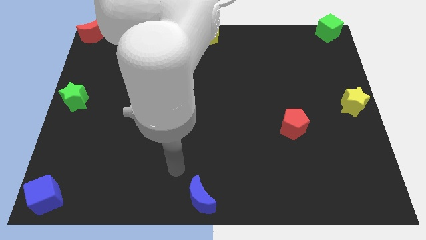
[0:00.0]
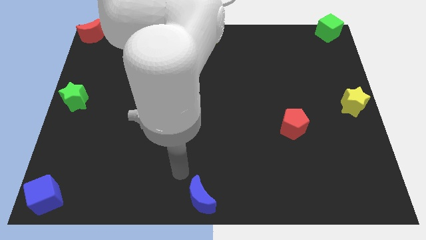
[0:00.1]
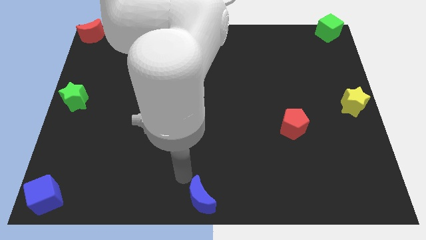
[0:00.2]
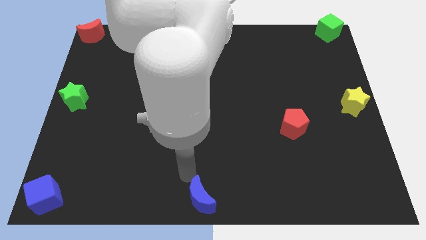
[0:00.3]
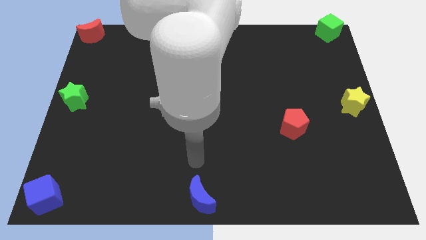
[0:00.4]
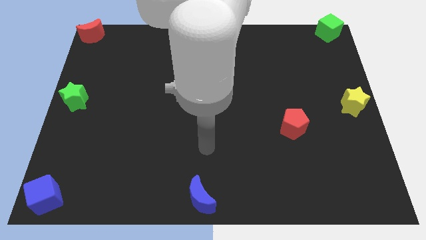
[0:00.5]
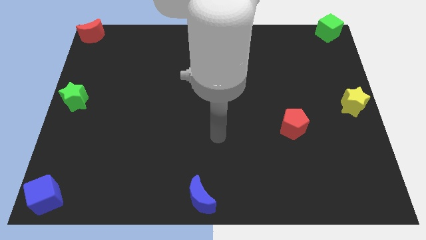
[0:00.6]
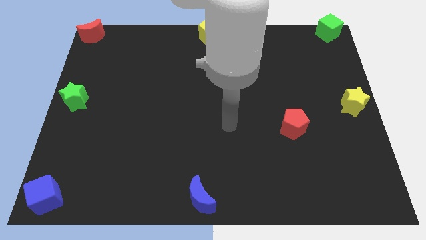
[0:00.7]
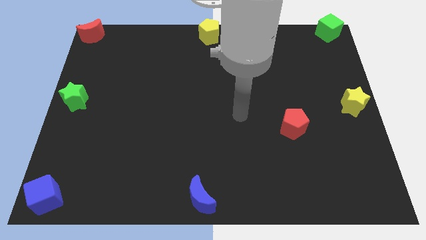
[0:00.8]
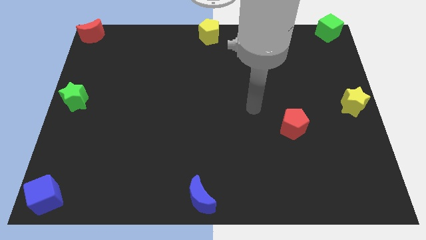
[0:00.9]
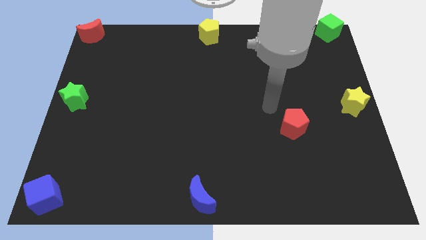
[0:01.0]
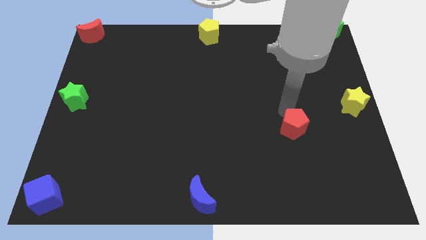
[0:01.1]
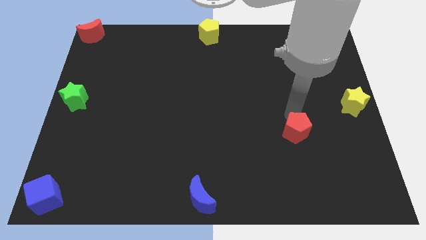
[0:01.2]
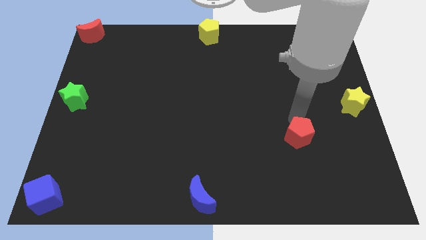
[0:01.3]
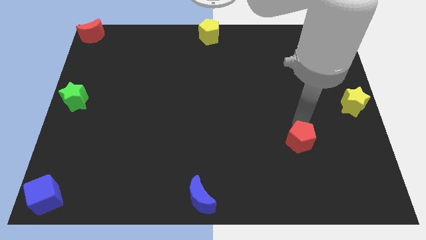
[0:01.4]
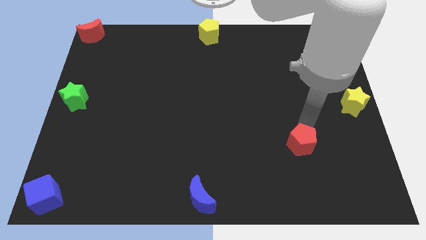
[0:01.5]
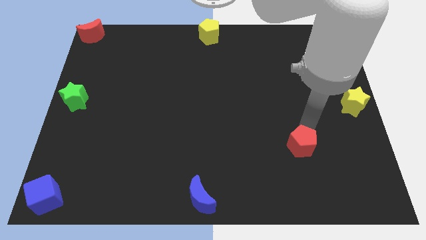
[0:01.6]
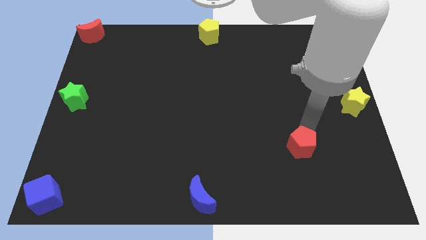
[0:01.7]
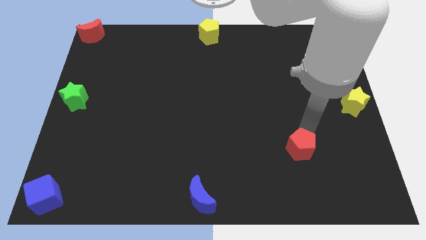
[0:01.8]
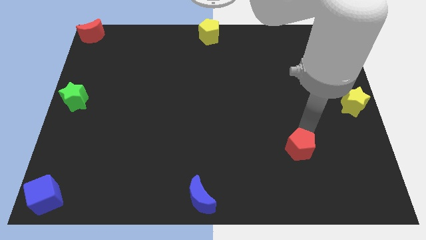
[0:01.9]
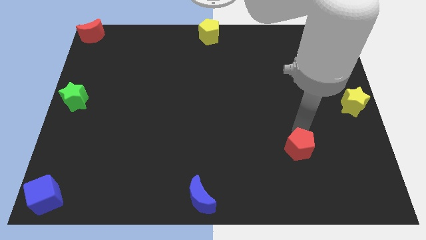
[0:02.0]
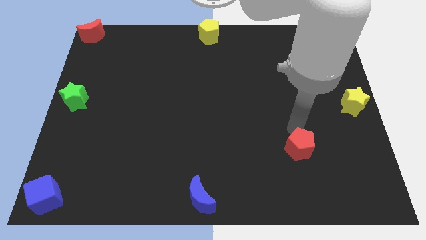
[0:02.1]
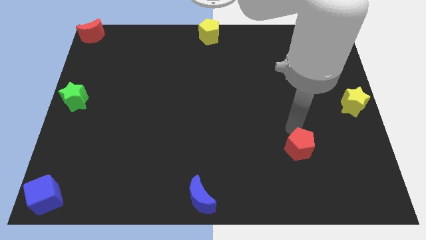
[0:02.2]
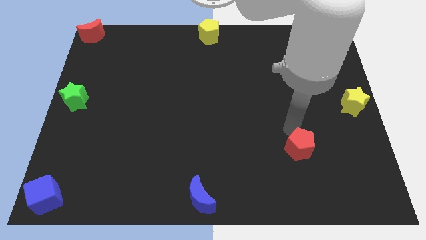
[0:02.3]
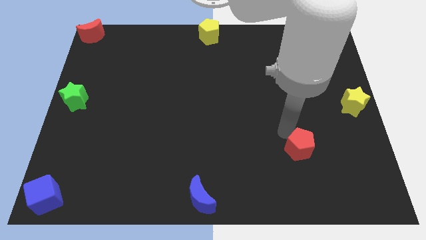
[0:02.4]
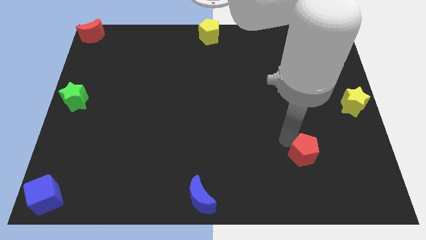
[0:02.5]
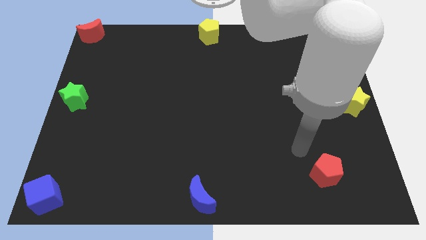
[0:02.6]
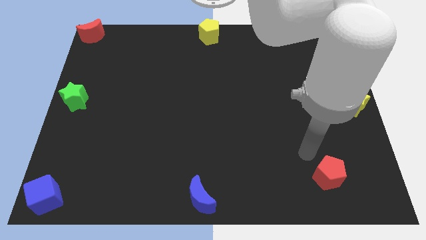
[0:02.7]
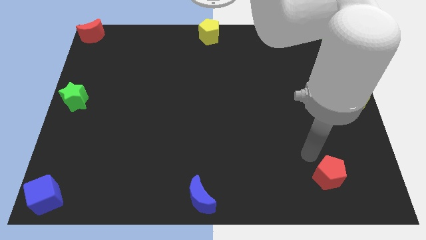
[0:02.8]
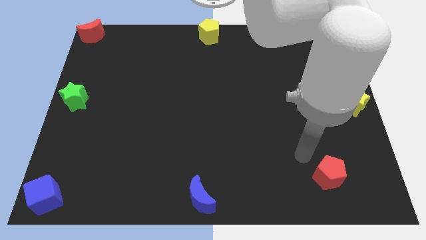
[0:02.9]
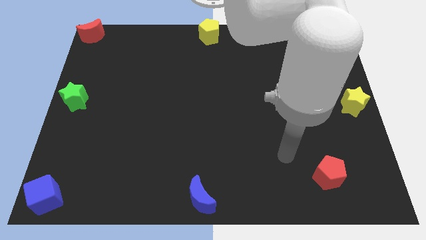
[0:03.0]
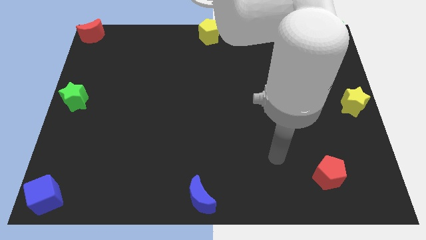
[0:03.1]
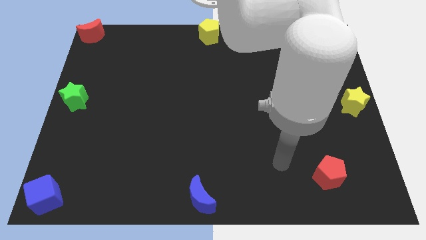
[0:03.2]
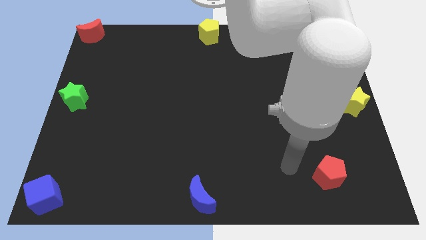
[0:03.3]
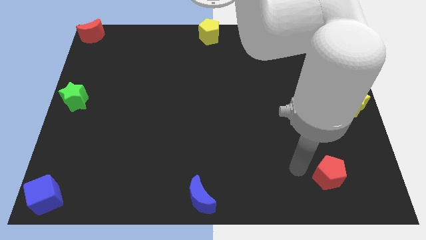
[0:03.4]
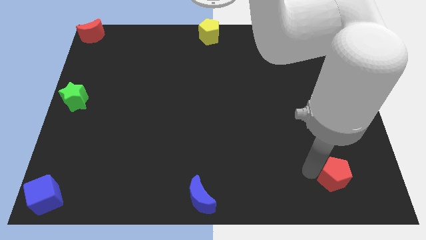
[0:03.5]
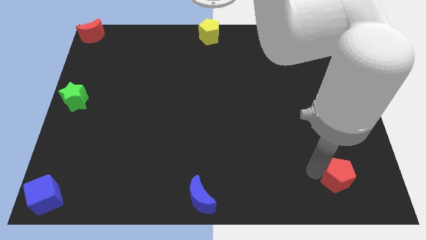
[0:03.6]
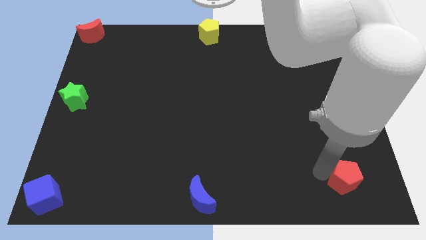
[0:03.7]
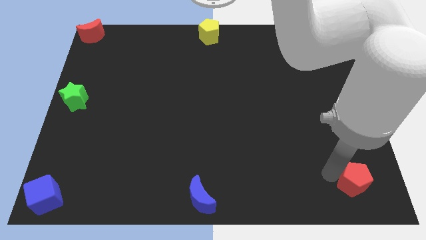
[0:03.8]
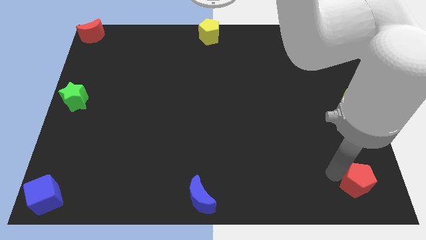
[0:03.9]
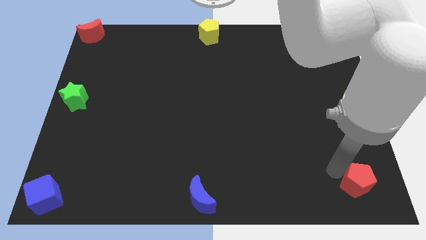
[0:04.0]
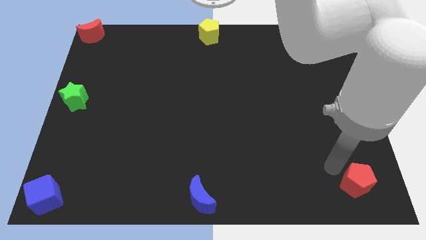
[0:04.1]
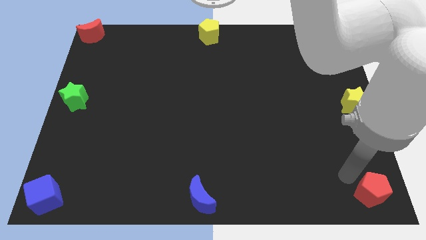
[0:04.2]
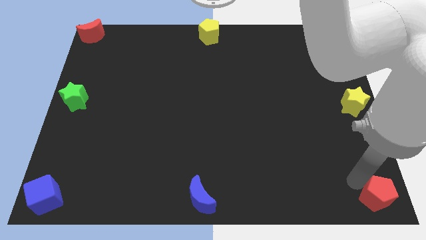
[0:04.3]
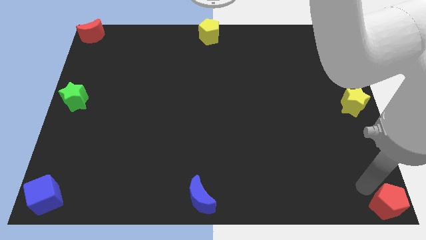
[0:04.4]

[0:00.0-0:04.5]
push the red pentagon to the bottom right corner of the board

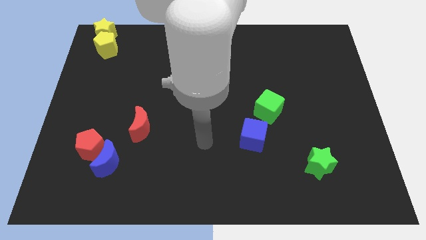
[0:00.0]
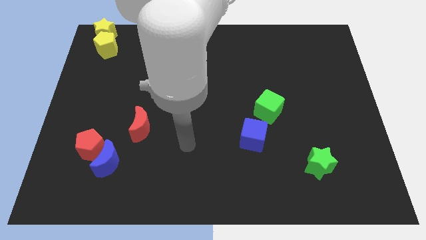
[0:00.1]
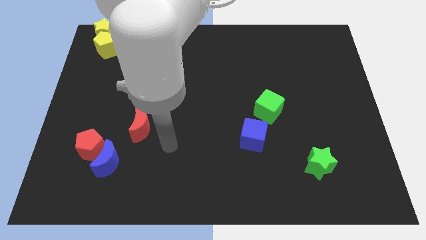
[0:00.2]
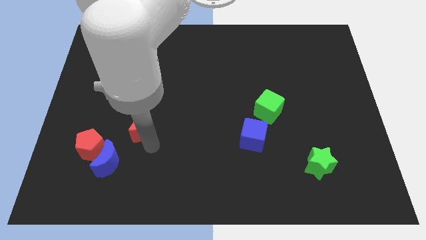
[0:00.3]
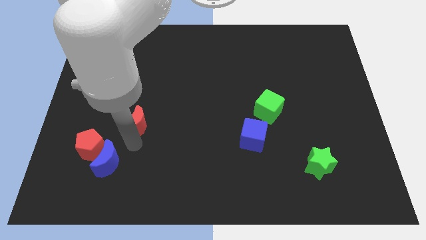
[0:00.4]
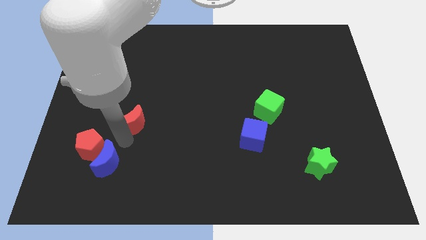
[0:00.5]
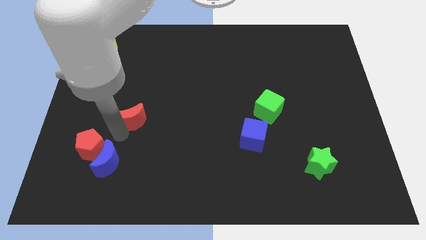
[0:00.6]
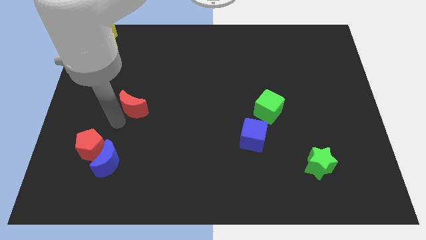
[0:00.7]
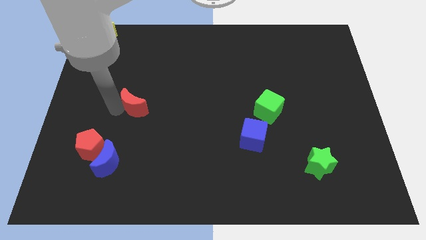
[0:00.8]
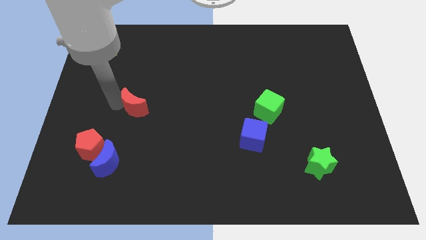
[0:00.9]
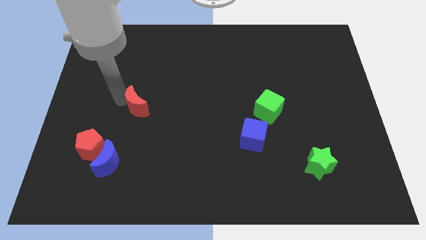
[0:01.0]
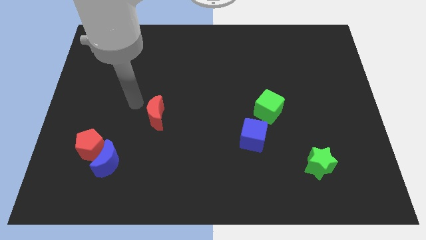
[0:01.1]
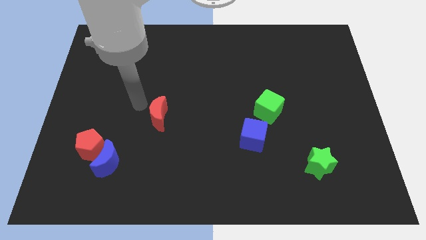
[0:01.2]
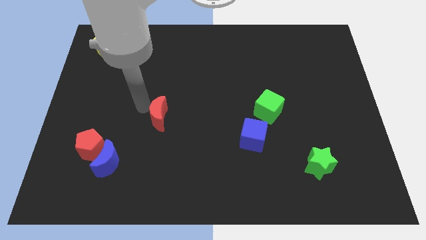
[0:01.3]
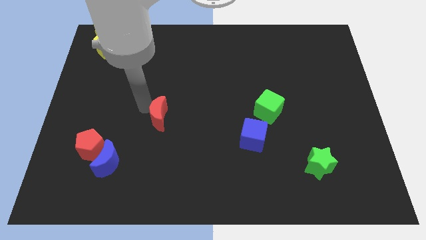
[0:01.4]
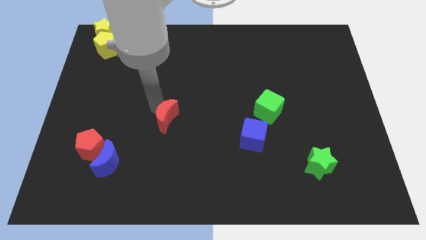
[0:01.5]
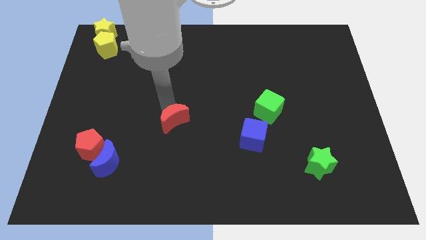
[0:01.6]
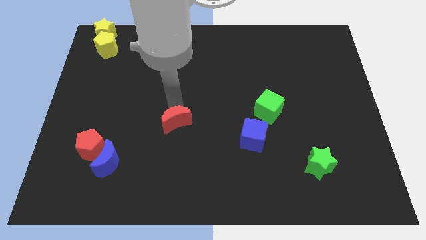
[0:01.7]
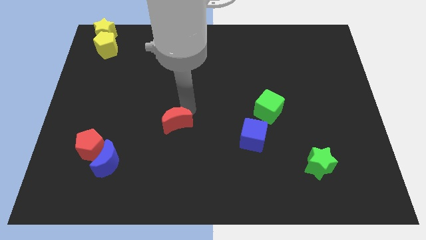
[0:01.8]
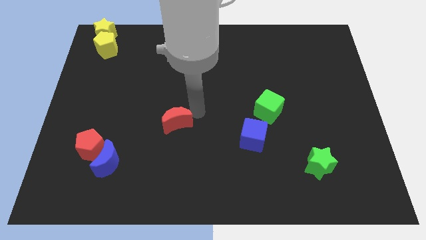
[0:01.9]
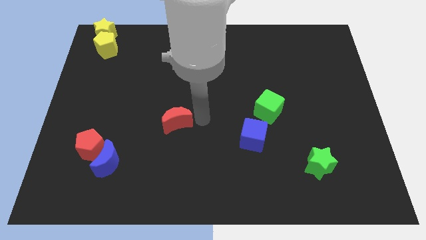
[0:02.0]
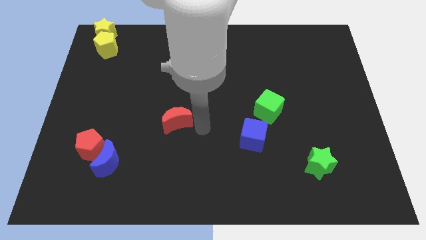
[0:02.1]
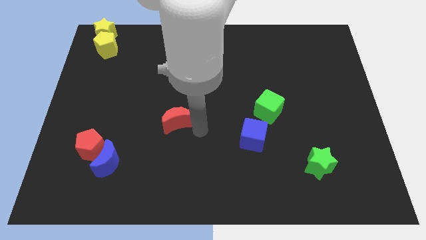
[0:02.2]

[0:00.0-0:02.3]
turn around the red moon

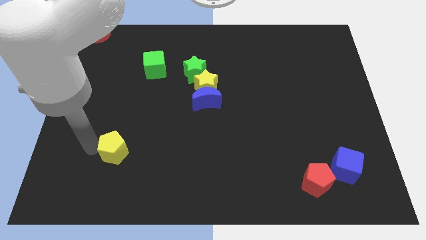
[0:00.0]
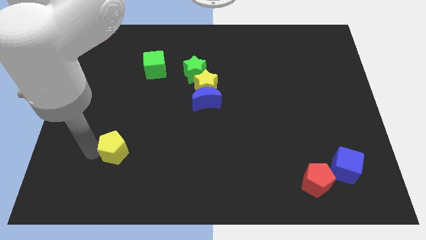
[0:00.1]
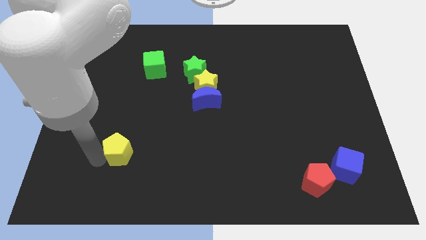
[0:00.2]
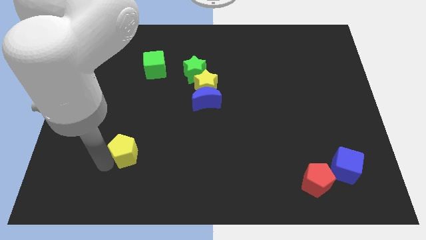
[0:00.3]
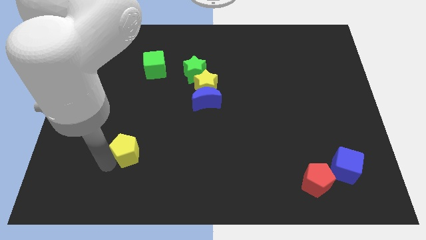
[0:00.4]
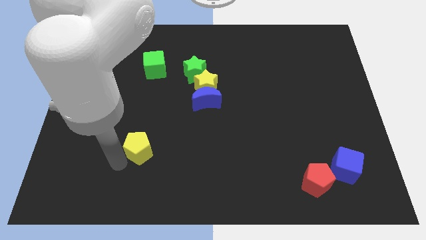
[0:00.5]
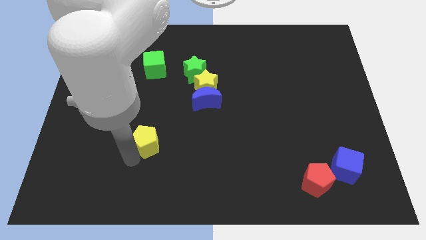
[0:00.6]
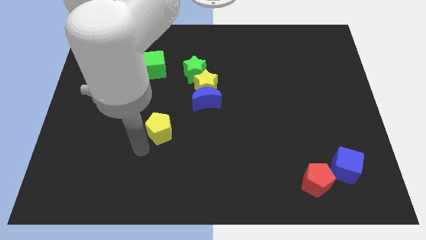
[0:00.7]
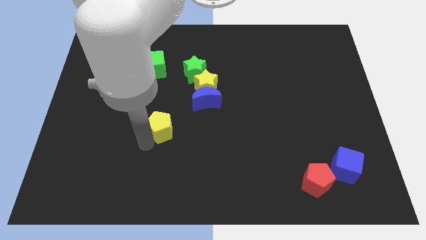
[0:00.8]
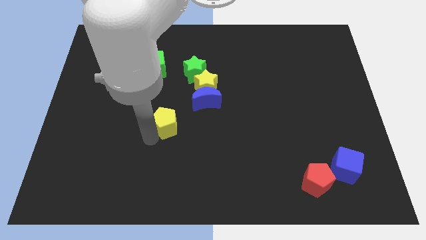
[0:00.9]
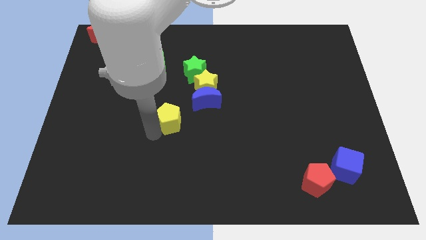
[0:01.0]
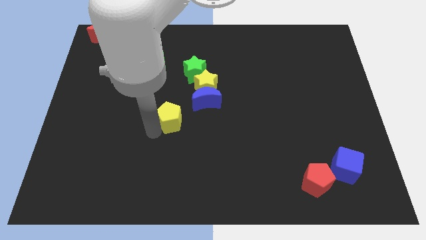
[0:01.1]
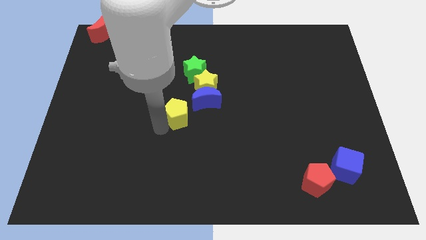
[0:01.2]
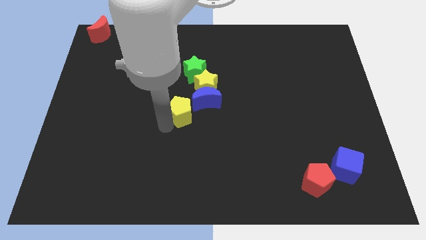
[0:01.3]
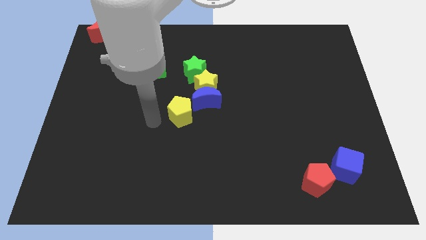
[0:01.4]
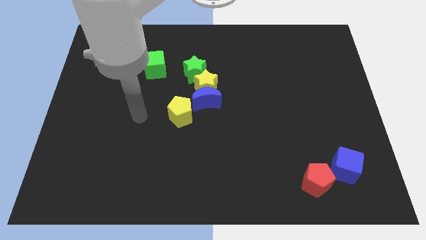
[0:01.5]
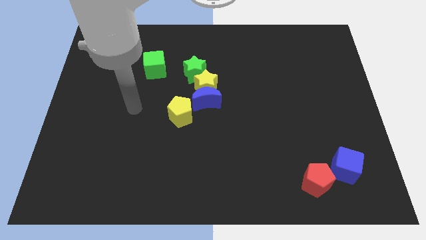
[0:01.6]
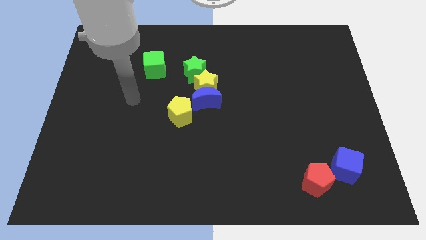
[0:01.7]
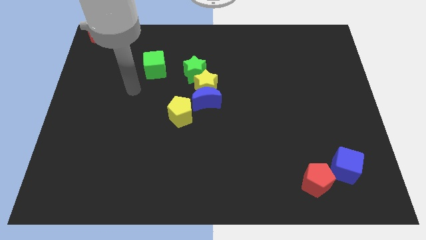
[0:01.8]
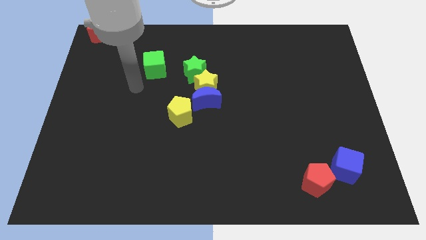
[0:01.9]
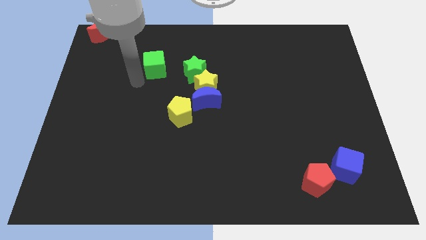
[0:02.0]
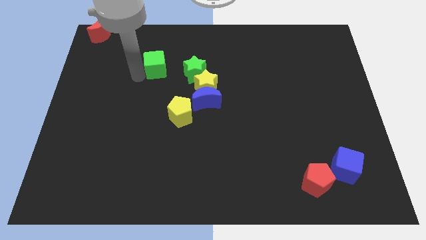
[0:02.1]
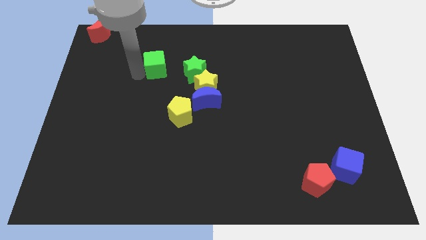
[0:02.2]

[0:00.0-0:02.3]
push the yellow pentagon towards the blue crescent
